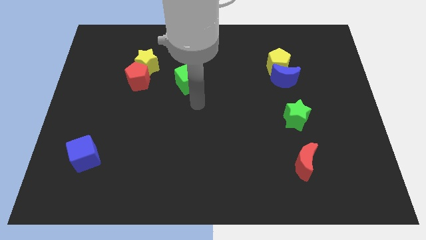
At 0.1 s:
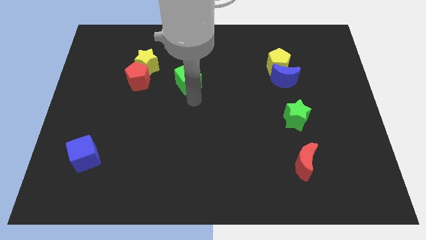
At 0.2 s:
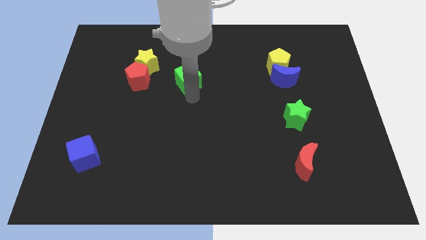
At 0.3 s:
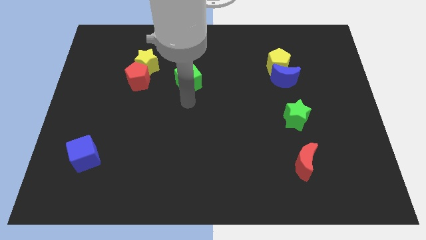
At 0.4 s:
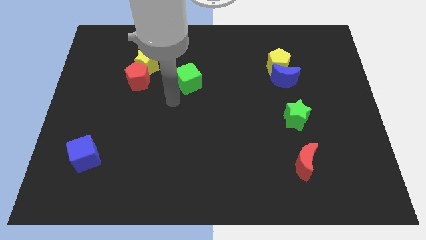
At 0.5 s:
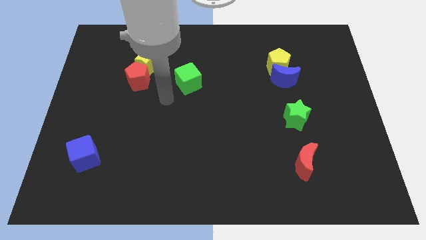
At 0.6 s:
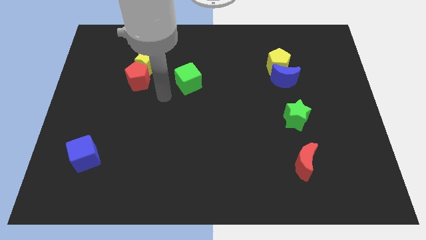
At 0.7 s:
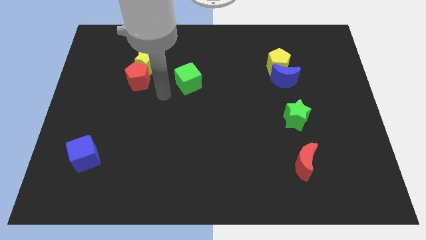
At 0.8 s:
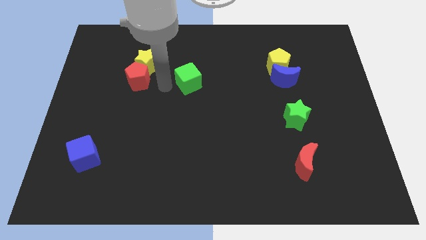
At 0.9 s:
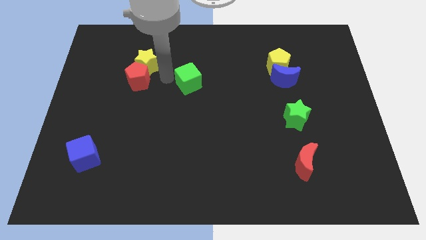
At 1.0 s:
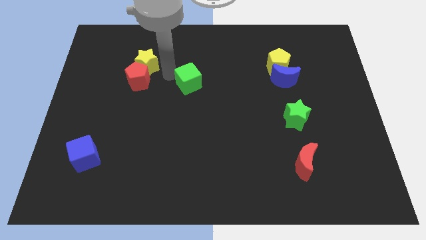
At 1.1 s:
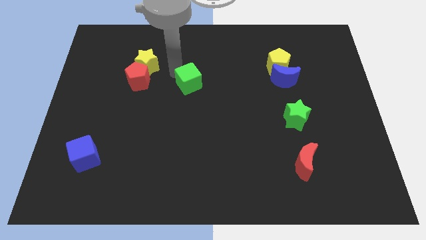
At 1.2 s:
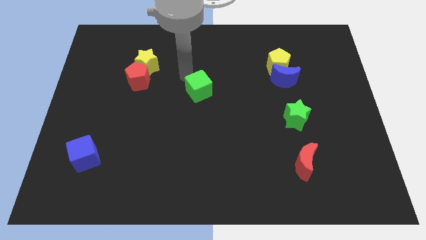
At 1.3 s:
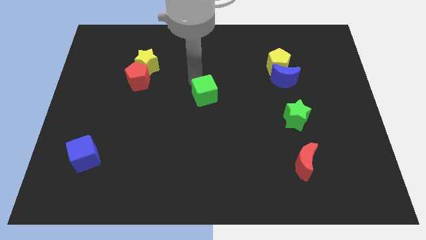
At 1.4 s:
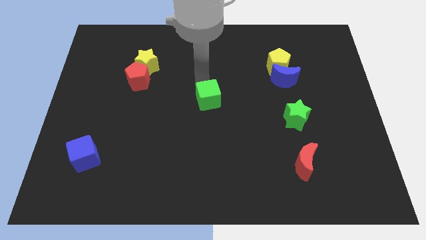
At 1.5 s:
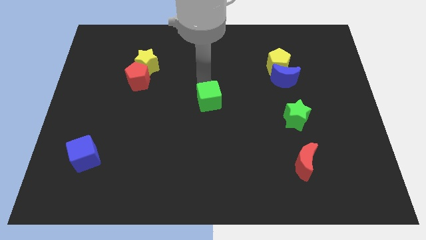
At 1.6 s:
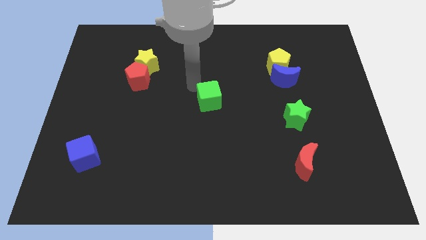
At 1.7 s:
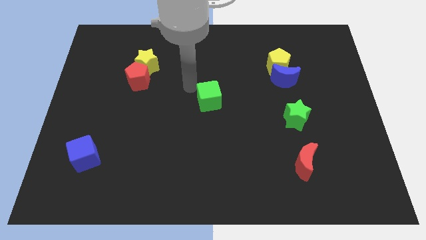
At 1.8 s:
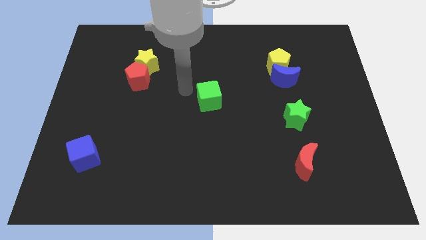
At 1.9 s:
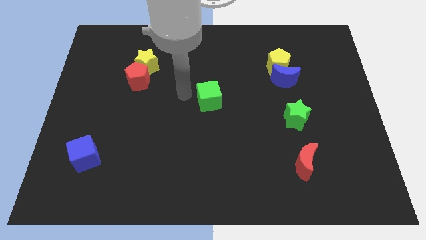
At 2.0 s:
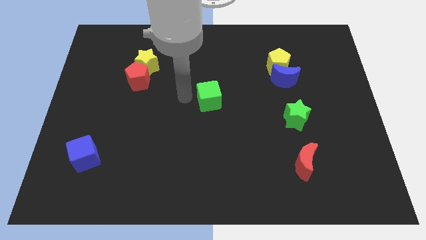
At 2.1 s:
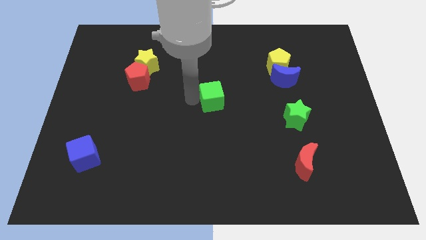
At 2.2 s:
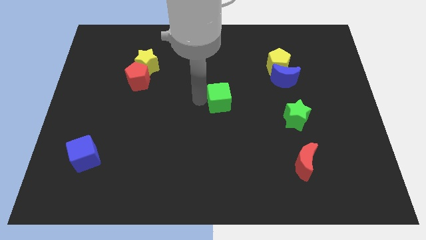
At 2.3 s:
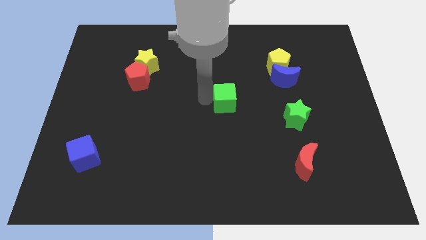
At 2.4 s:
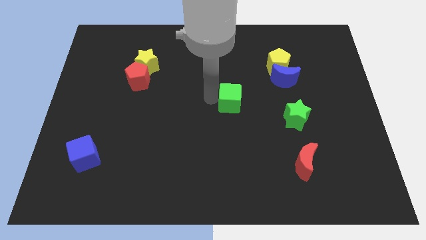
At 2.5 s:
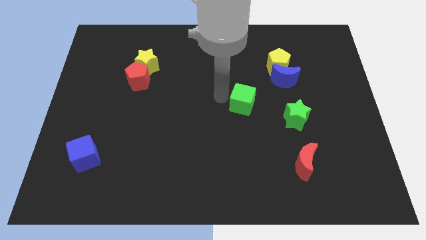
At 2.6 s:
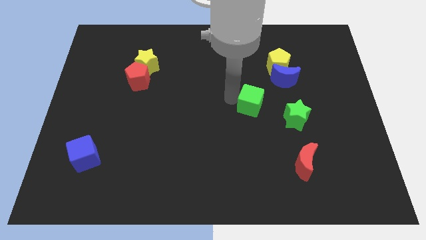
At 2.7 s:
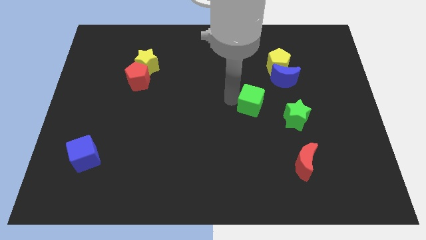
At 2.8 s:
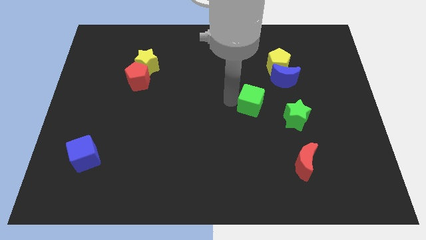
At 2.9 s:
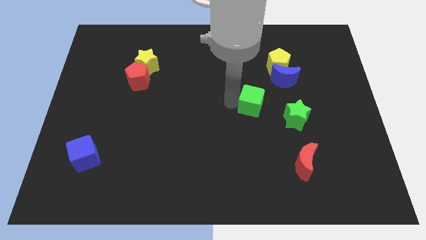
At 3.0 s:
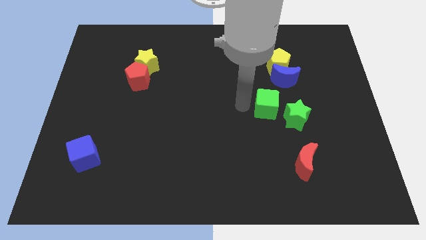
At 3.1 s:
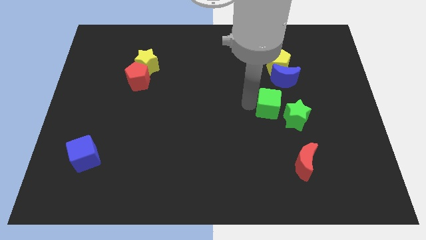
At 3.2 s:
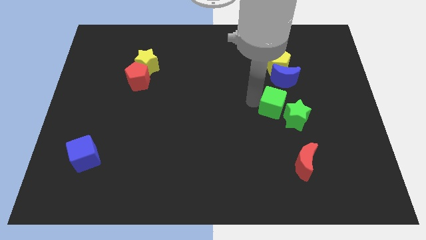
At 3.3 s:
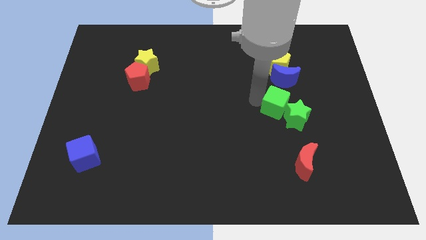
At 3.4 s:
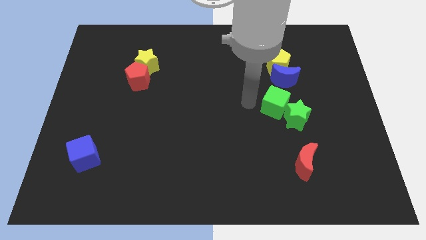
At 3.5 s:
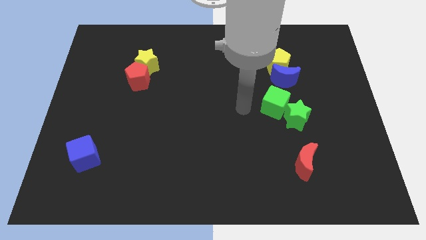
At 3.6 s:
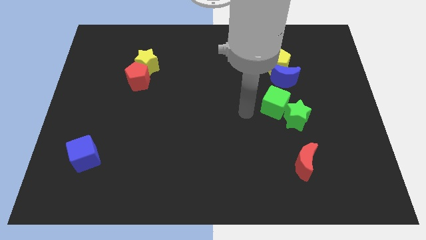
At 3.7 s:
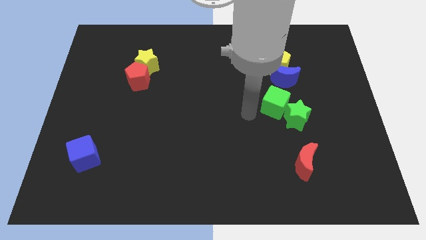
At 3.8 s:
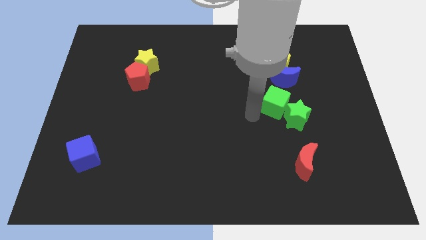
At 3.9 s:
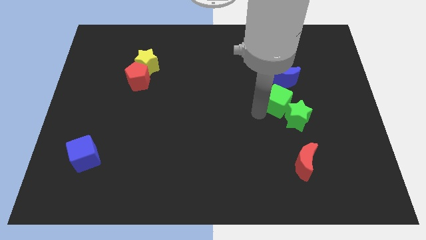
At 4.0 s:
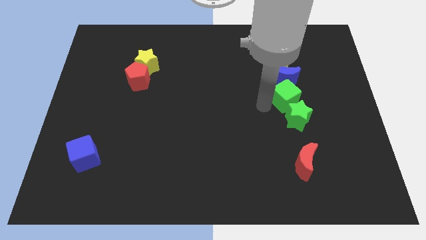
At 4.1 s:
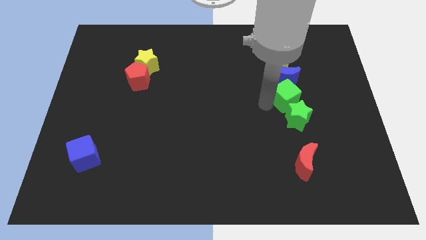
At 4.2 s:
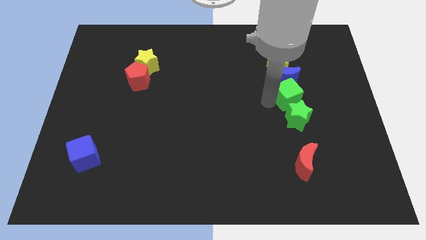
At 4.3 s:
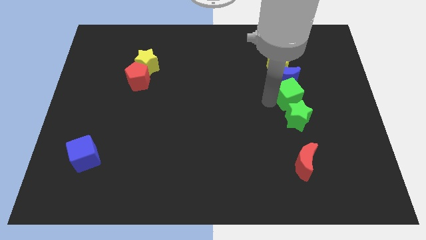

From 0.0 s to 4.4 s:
push the green cube into the green star

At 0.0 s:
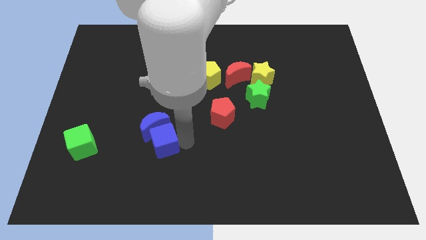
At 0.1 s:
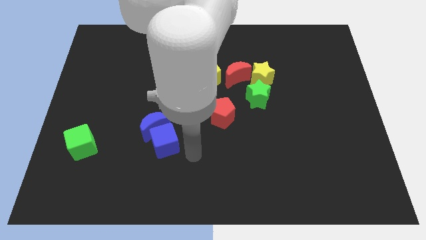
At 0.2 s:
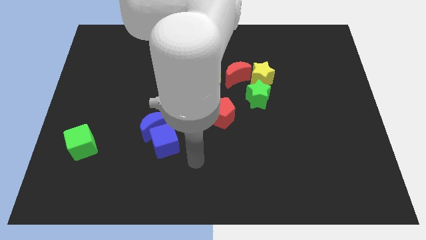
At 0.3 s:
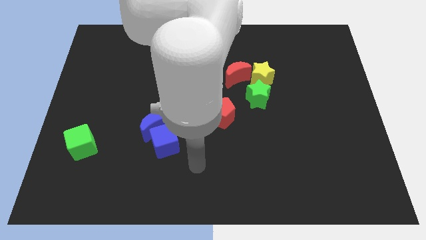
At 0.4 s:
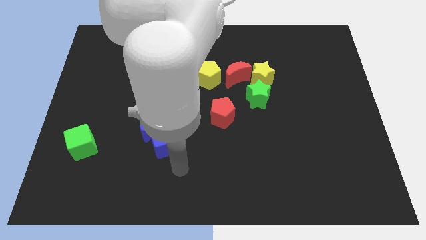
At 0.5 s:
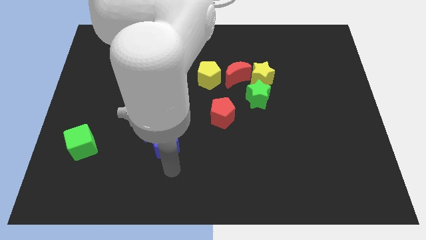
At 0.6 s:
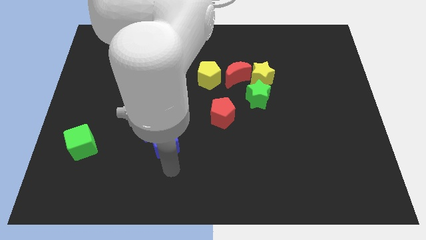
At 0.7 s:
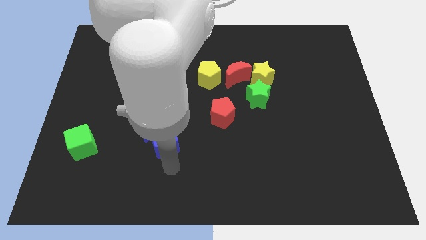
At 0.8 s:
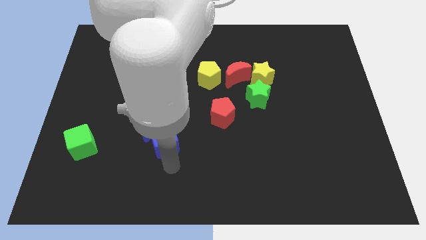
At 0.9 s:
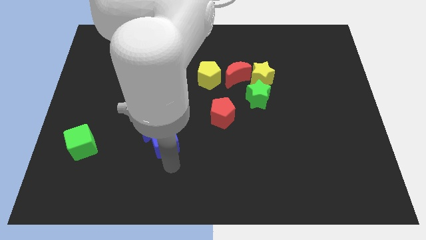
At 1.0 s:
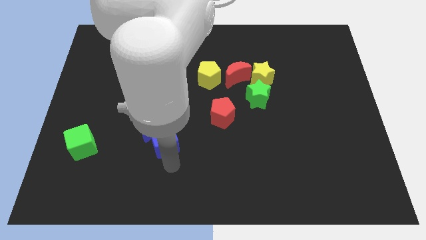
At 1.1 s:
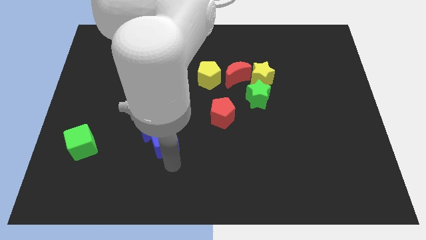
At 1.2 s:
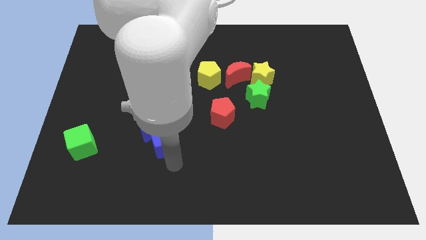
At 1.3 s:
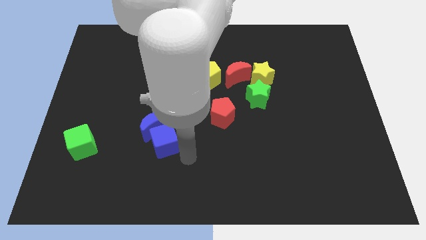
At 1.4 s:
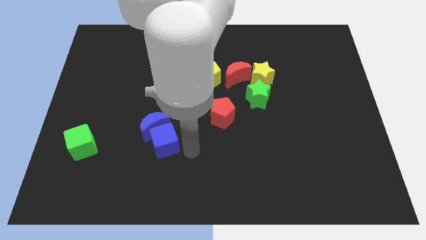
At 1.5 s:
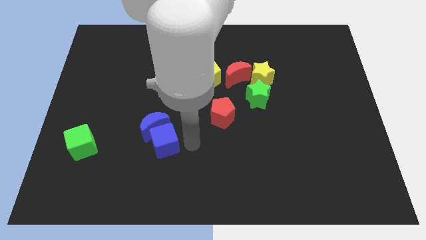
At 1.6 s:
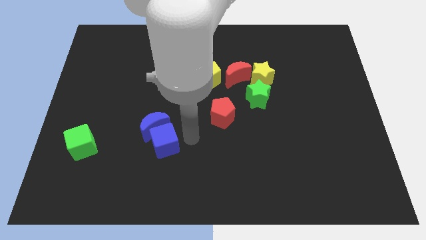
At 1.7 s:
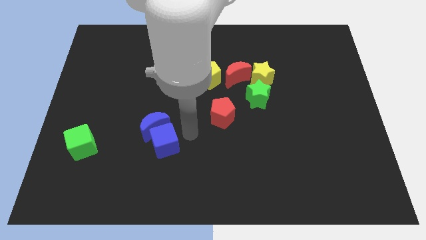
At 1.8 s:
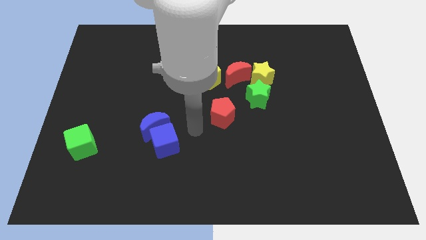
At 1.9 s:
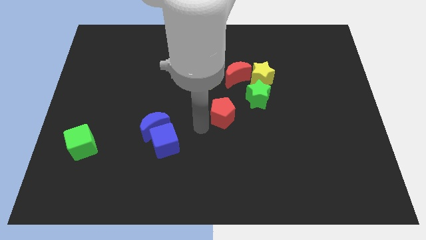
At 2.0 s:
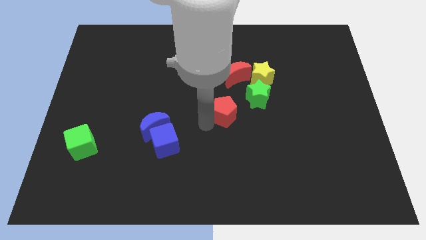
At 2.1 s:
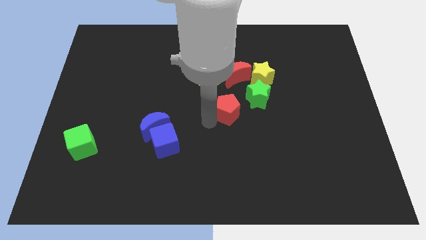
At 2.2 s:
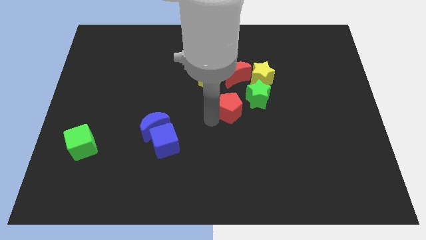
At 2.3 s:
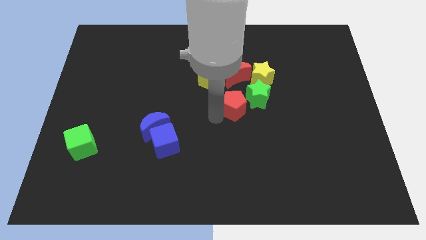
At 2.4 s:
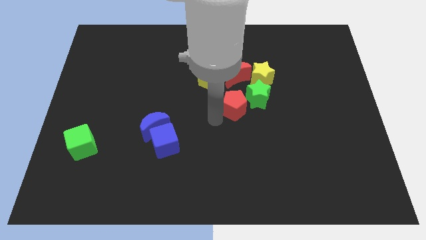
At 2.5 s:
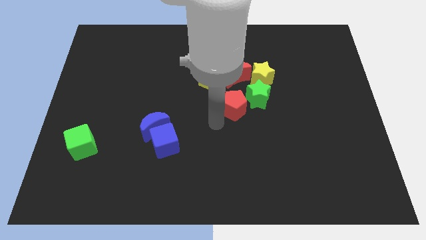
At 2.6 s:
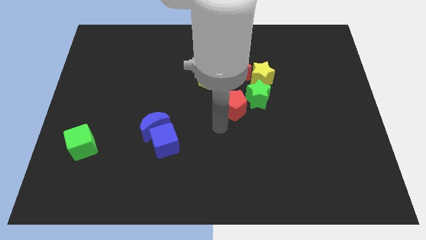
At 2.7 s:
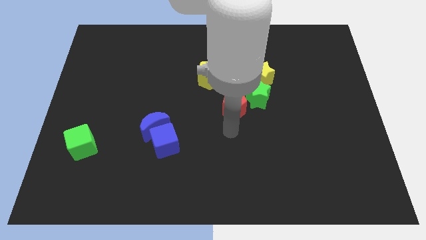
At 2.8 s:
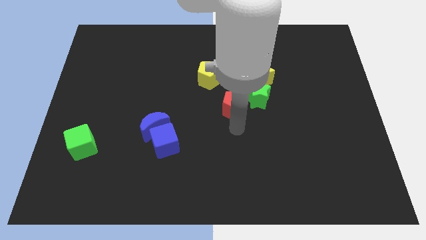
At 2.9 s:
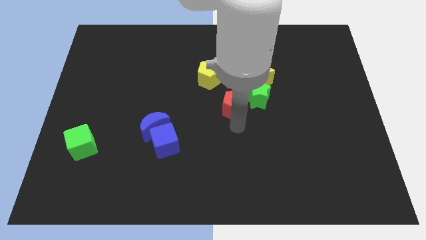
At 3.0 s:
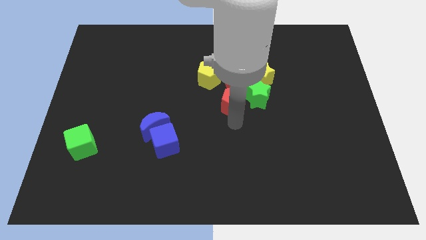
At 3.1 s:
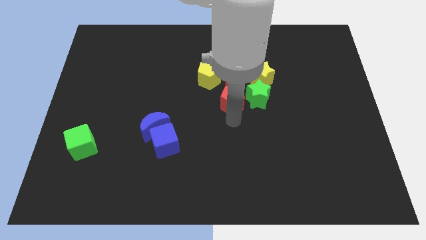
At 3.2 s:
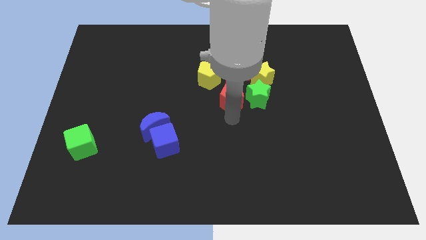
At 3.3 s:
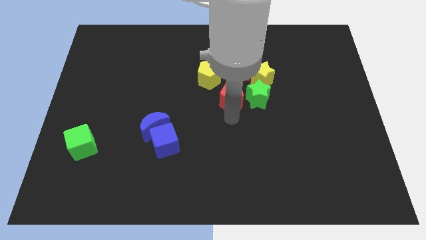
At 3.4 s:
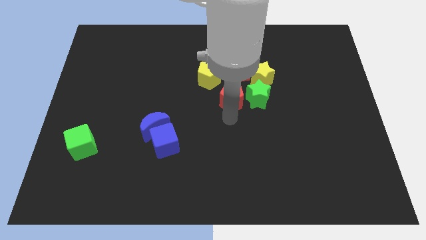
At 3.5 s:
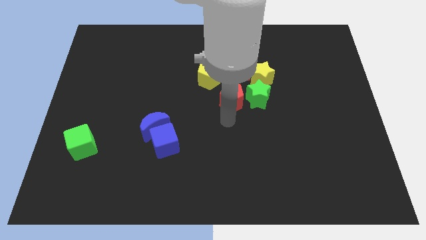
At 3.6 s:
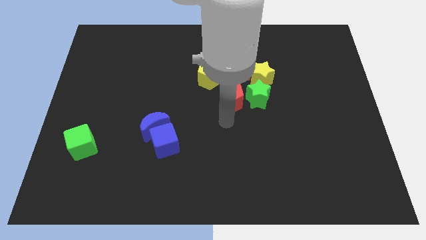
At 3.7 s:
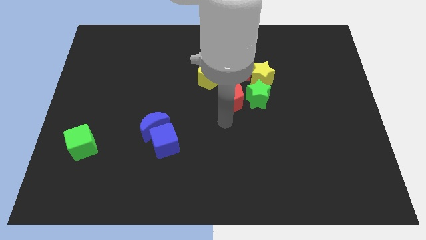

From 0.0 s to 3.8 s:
move the red pentagon to the left of green star

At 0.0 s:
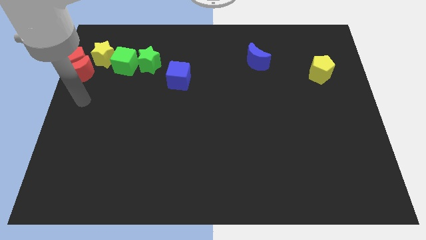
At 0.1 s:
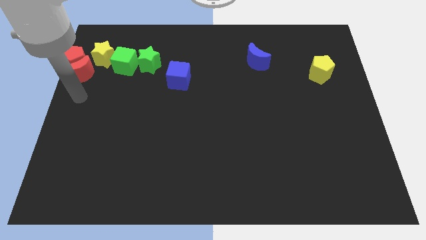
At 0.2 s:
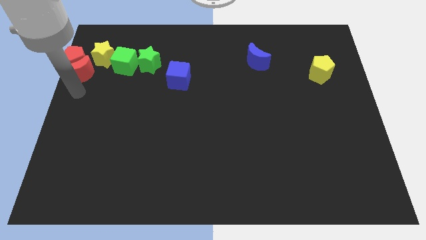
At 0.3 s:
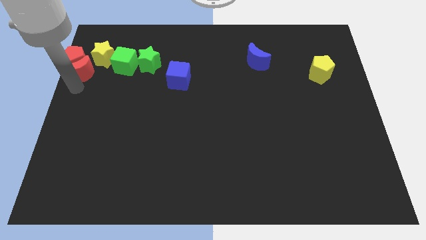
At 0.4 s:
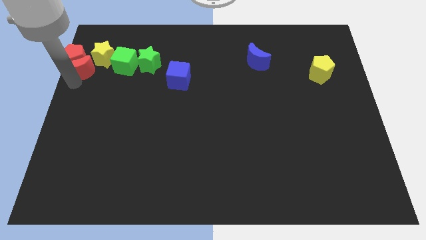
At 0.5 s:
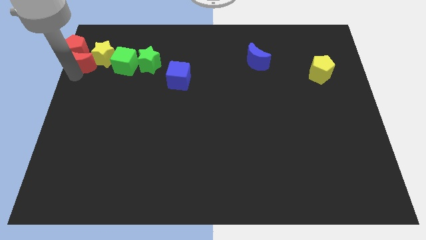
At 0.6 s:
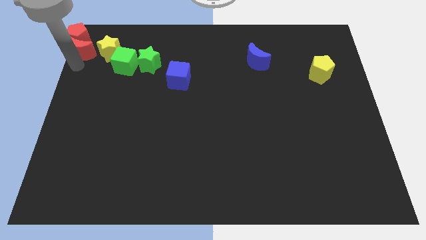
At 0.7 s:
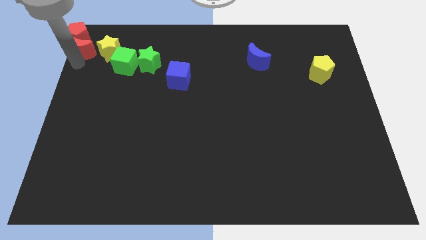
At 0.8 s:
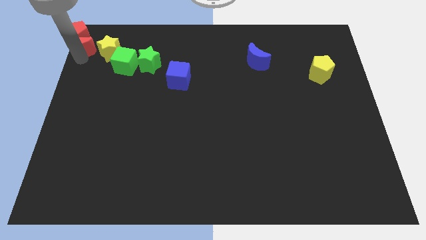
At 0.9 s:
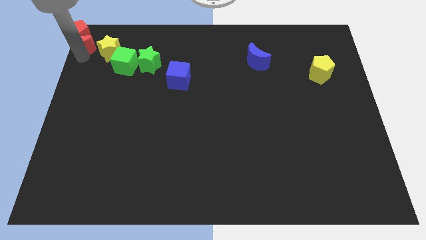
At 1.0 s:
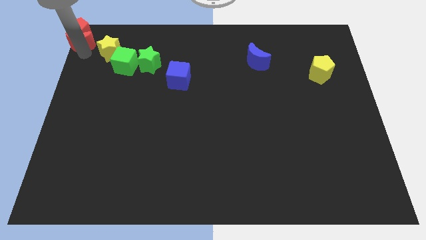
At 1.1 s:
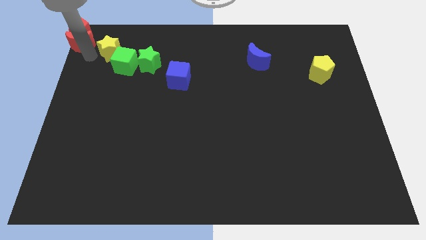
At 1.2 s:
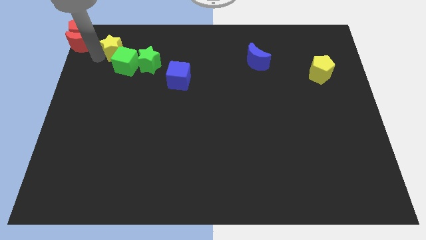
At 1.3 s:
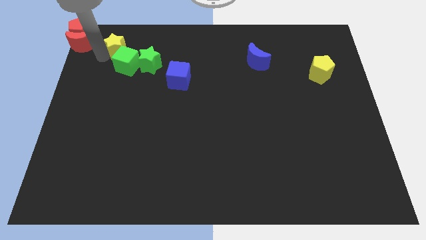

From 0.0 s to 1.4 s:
push the red moon and red pentagon to the top left corner
